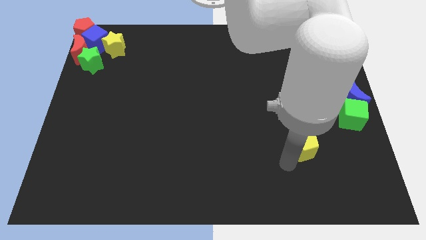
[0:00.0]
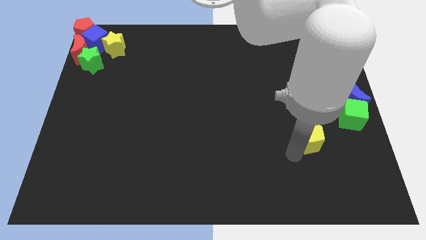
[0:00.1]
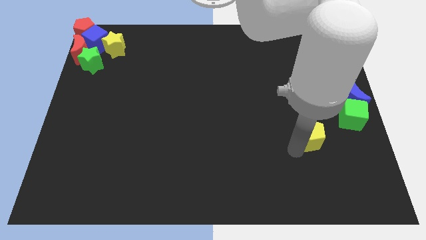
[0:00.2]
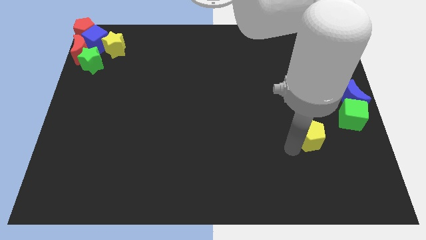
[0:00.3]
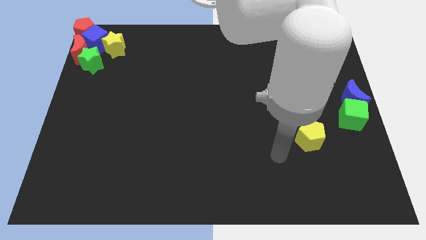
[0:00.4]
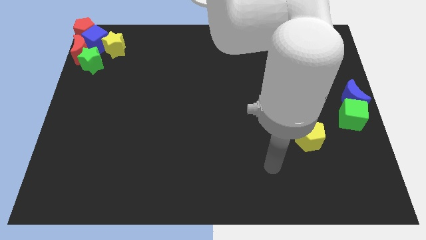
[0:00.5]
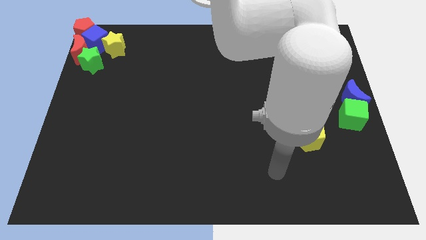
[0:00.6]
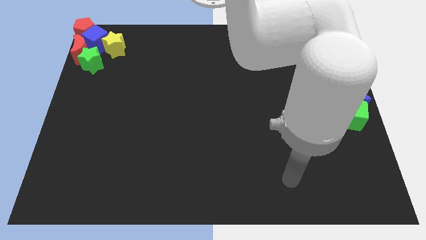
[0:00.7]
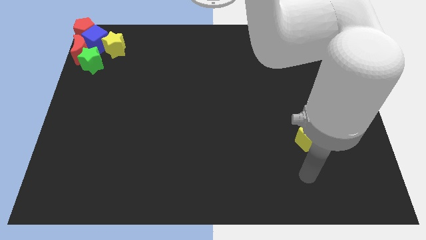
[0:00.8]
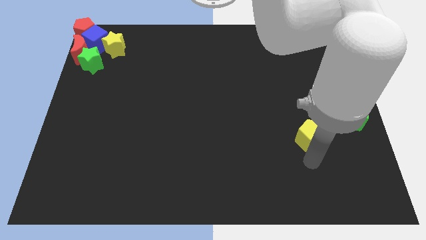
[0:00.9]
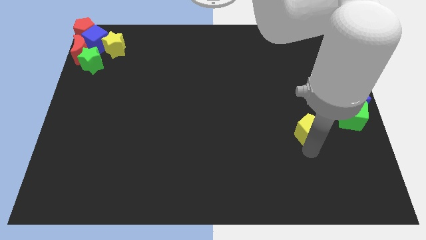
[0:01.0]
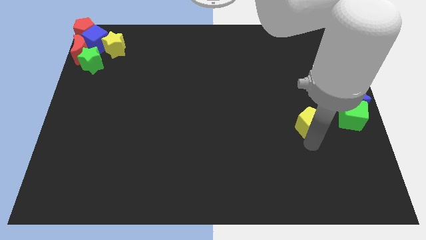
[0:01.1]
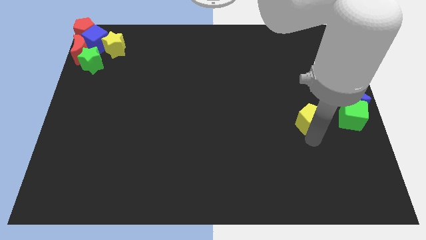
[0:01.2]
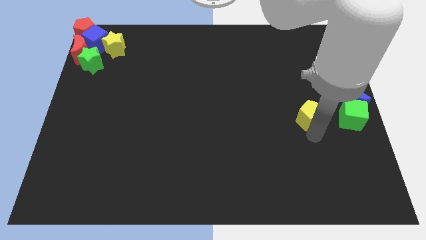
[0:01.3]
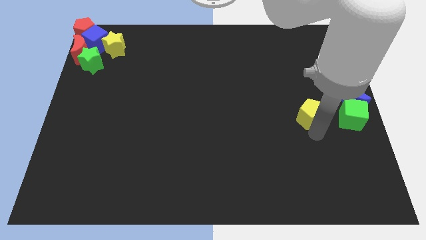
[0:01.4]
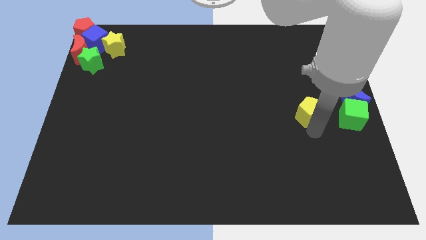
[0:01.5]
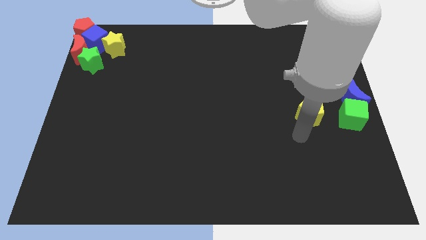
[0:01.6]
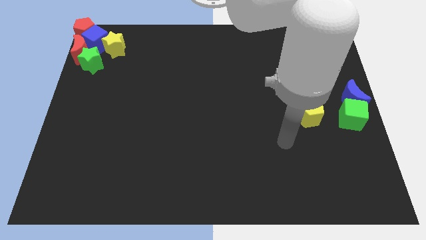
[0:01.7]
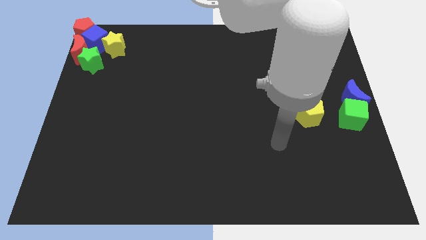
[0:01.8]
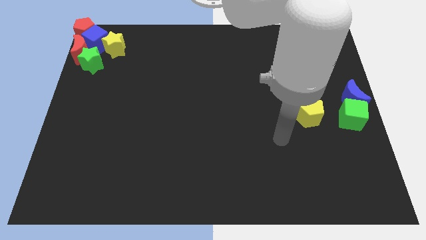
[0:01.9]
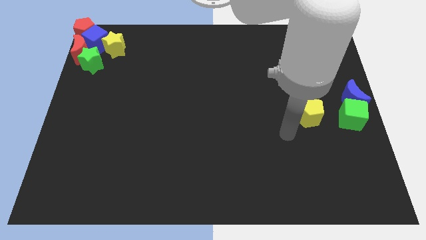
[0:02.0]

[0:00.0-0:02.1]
place yellow pentagon left to green cube

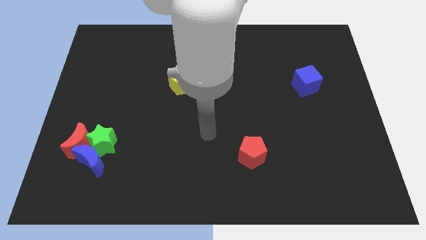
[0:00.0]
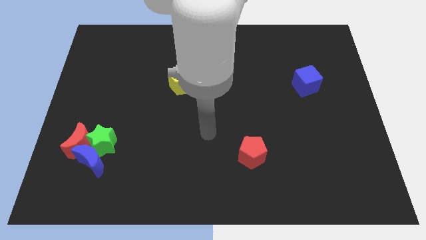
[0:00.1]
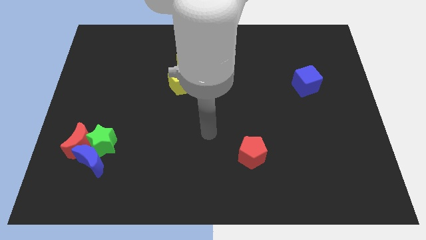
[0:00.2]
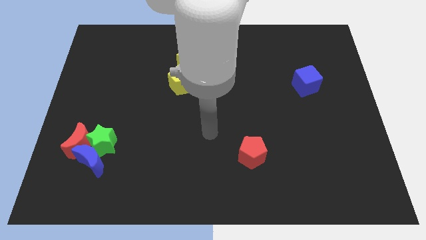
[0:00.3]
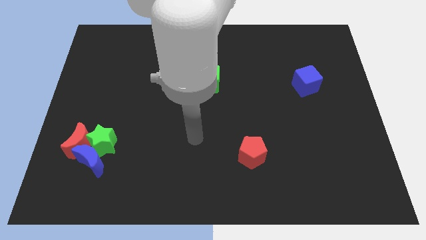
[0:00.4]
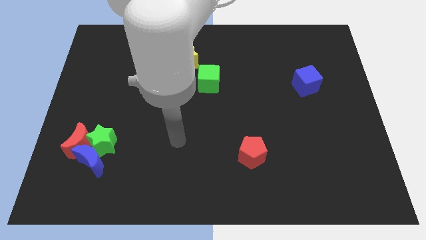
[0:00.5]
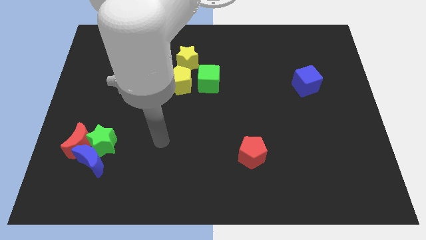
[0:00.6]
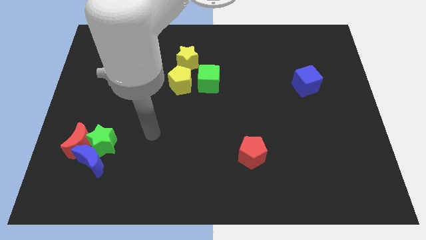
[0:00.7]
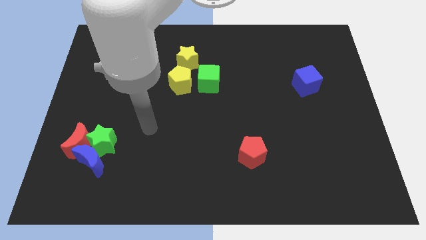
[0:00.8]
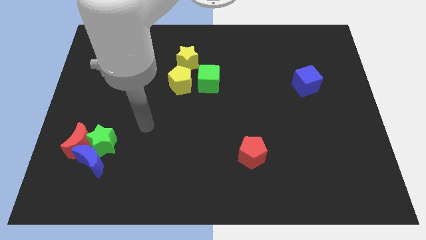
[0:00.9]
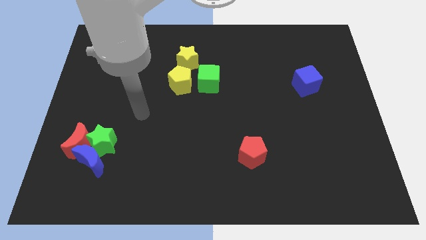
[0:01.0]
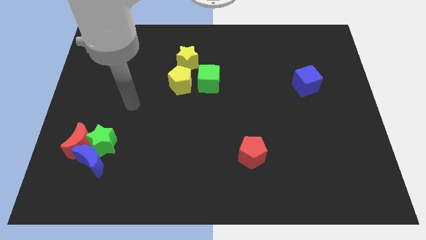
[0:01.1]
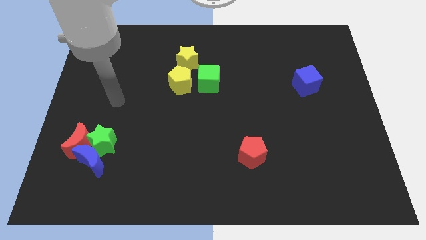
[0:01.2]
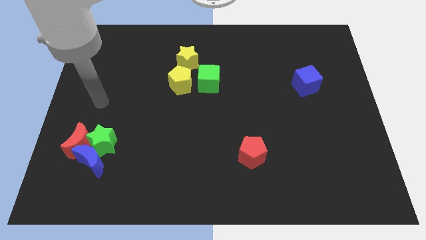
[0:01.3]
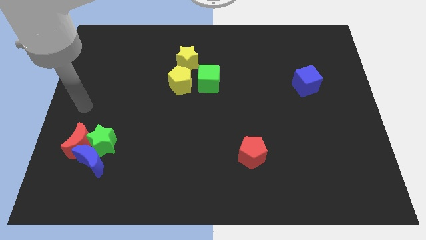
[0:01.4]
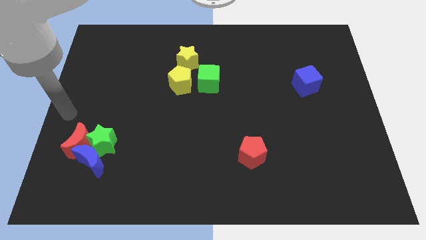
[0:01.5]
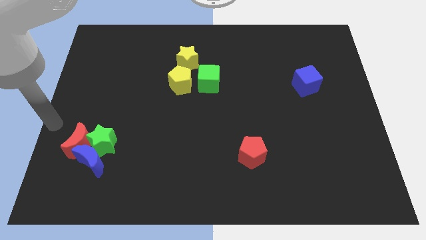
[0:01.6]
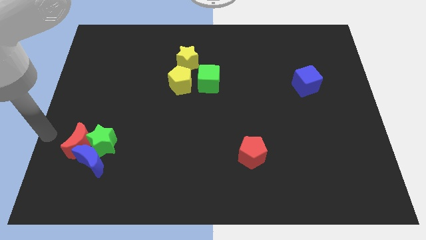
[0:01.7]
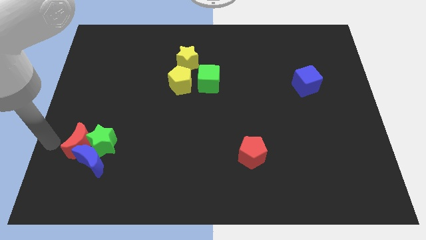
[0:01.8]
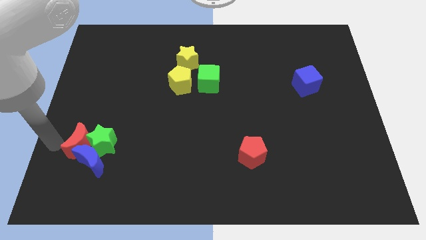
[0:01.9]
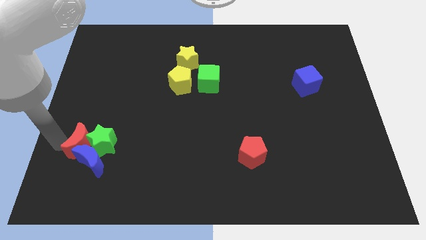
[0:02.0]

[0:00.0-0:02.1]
point your arm close to red moon

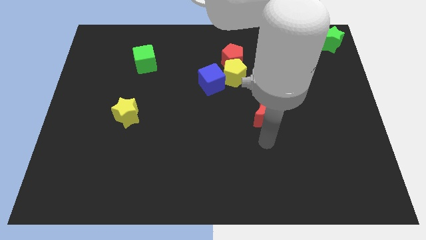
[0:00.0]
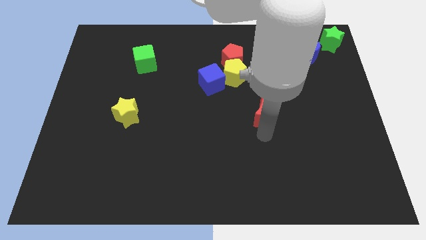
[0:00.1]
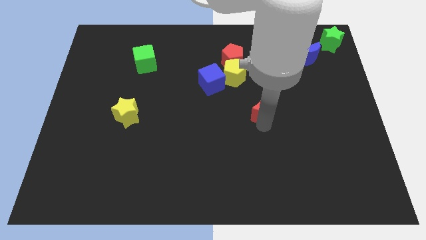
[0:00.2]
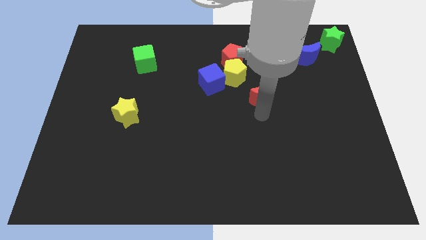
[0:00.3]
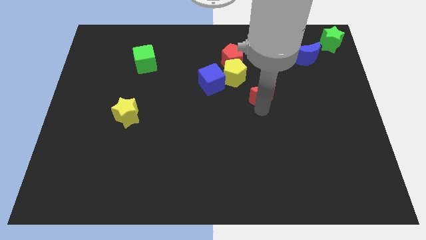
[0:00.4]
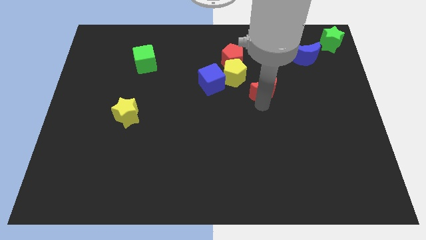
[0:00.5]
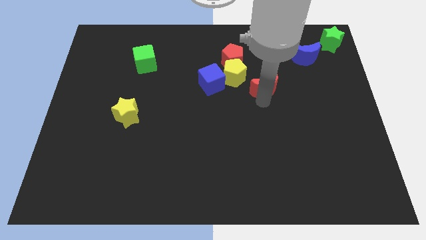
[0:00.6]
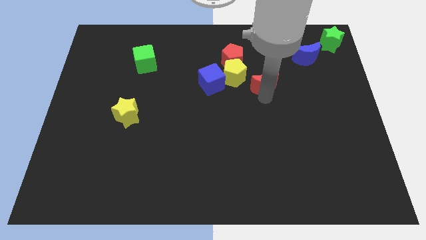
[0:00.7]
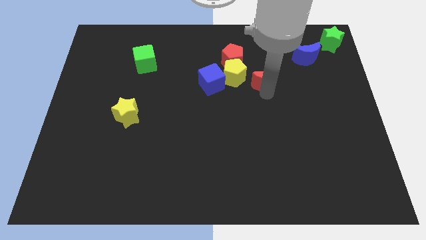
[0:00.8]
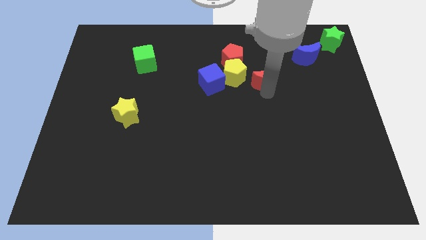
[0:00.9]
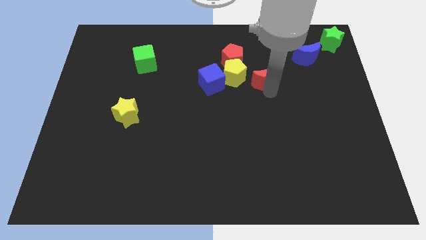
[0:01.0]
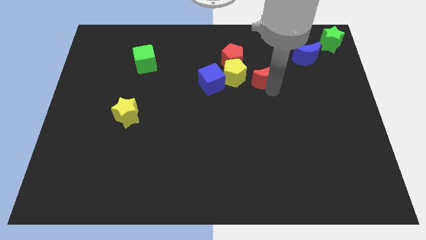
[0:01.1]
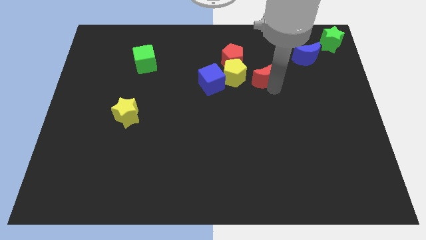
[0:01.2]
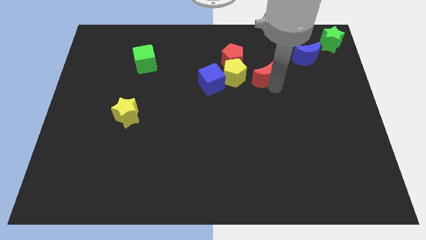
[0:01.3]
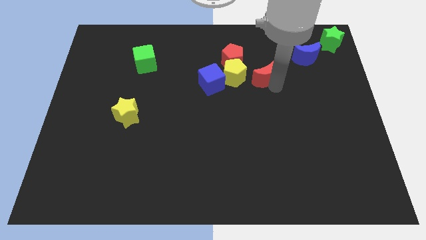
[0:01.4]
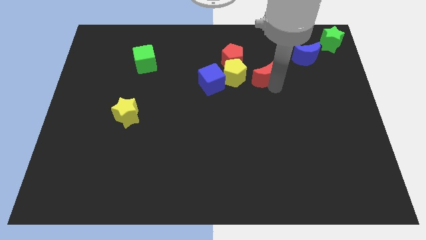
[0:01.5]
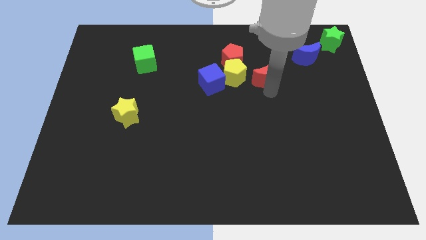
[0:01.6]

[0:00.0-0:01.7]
place the red moon diagonally to blue moon

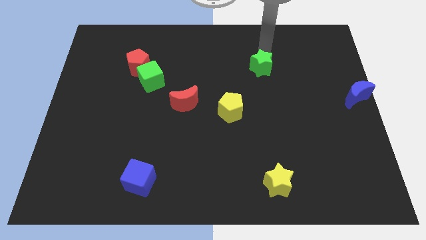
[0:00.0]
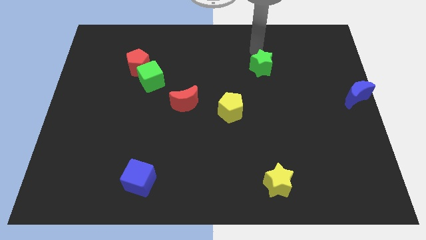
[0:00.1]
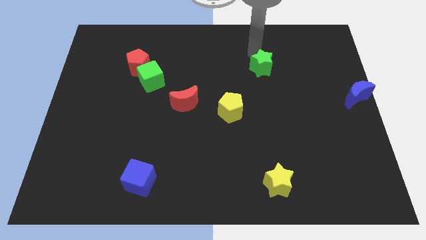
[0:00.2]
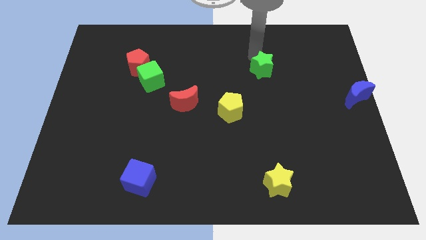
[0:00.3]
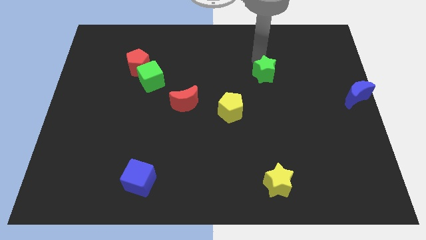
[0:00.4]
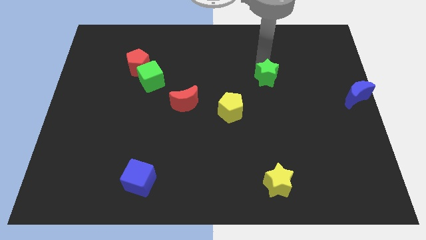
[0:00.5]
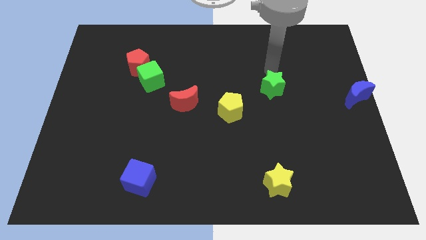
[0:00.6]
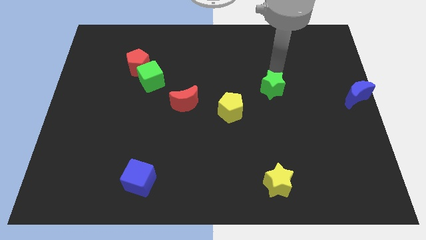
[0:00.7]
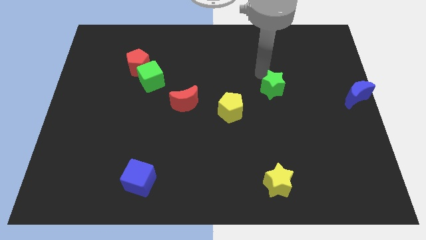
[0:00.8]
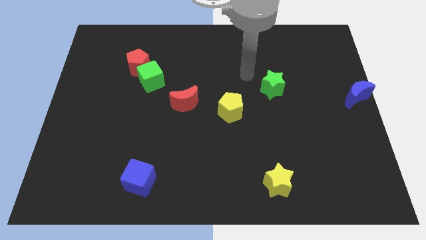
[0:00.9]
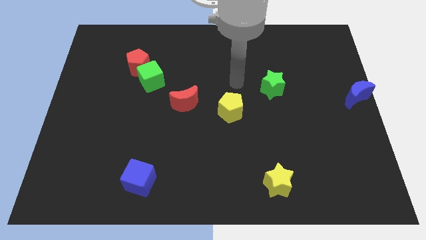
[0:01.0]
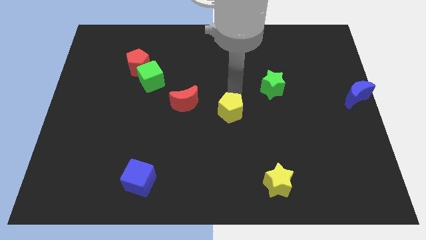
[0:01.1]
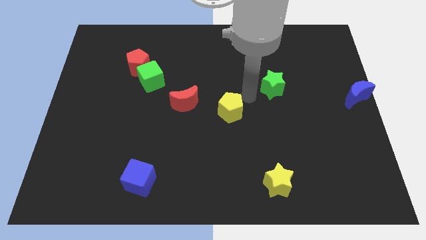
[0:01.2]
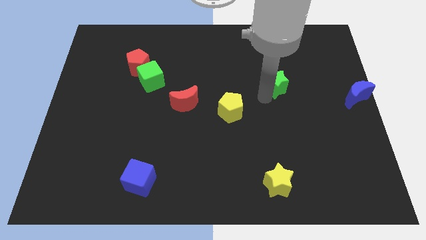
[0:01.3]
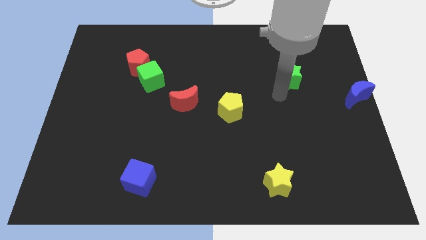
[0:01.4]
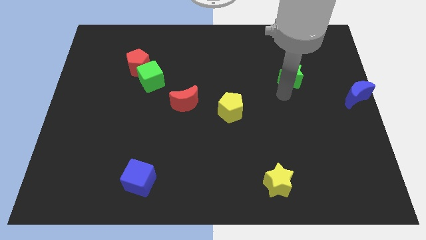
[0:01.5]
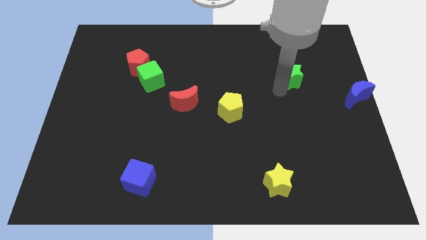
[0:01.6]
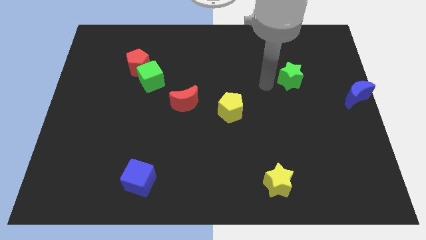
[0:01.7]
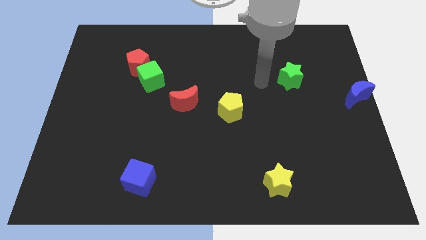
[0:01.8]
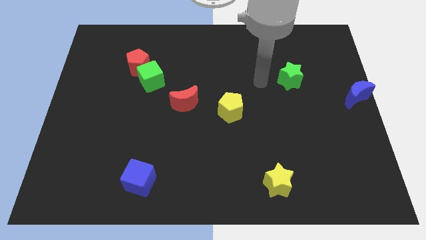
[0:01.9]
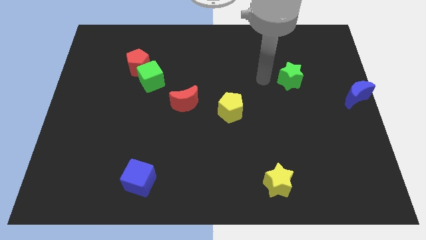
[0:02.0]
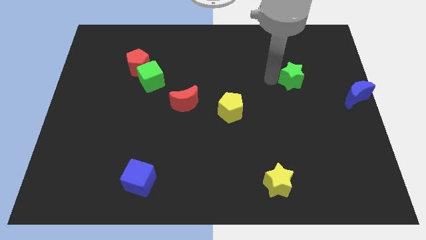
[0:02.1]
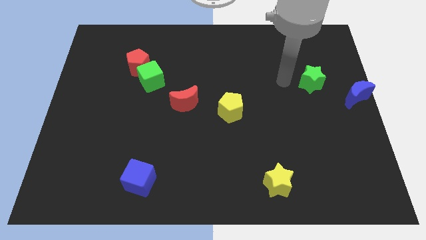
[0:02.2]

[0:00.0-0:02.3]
move the green star diagonal towards blue moon

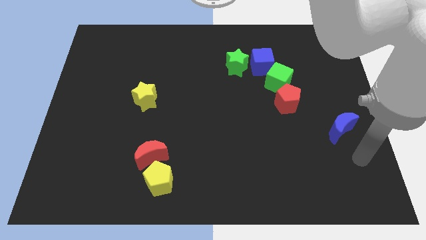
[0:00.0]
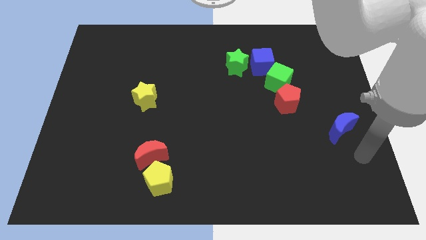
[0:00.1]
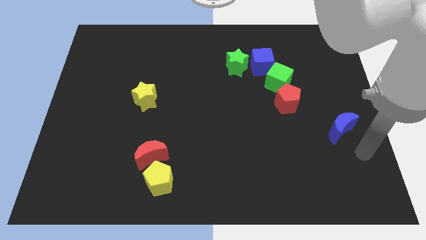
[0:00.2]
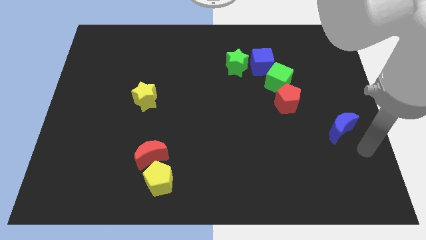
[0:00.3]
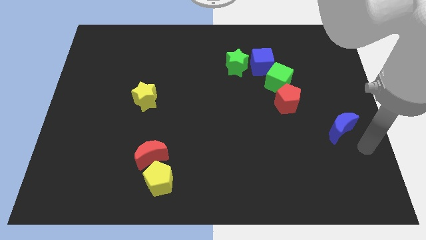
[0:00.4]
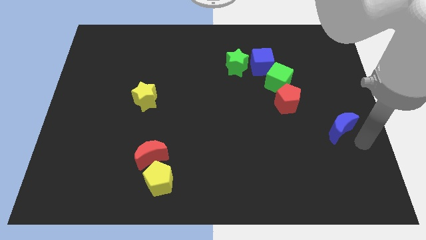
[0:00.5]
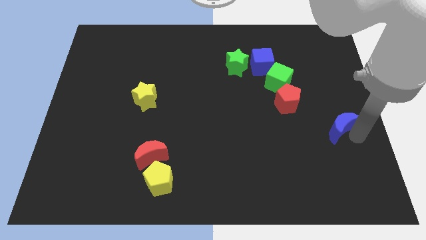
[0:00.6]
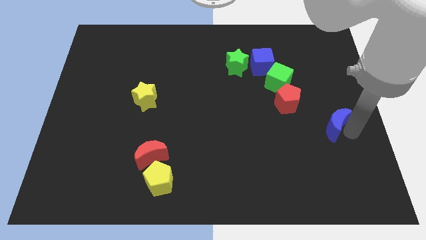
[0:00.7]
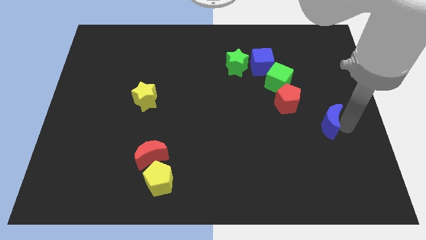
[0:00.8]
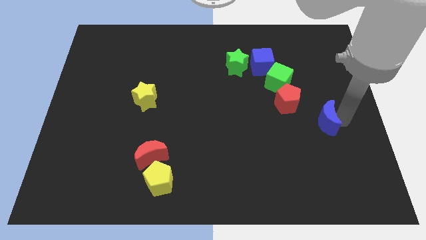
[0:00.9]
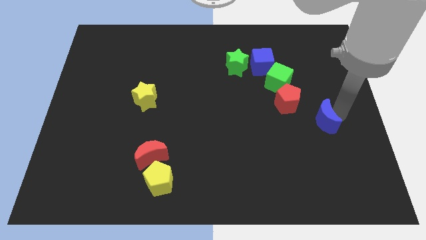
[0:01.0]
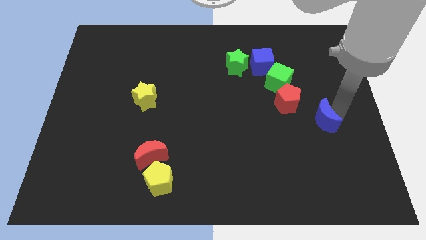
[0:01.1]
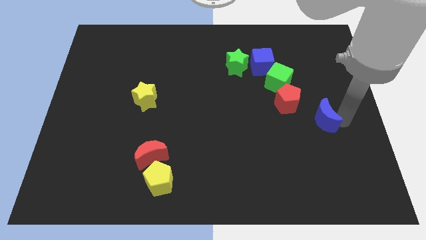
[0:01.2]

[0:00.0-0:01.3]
slightly move the blue crescent to the left of the board
